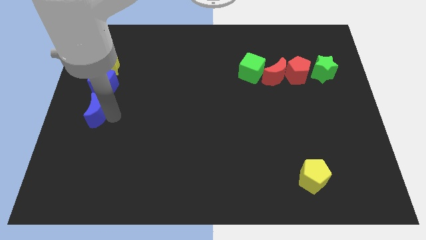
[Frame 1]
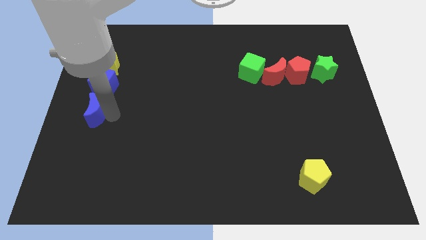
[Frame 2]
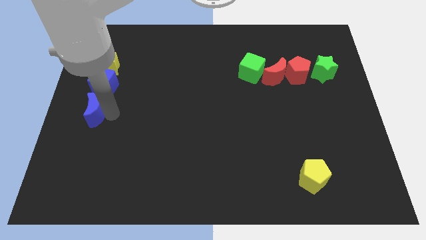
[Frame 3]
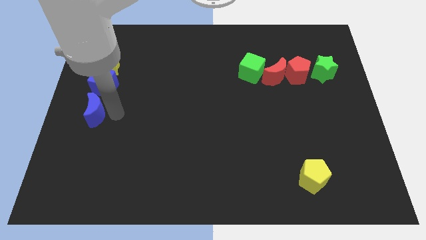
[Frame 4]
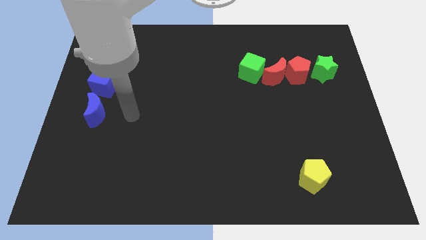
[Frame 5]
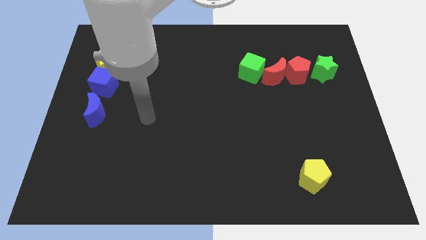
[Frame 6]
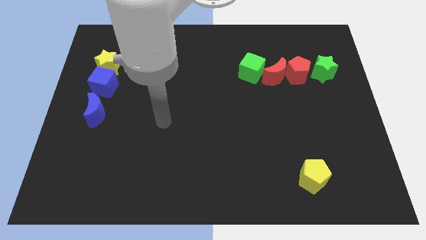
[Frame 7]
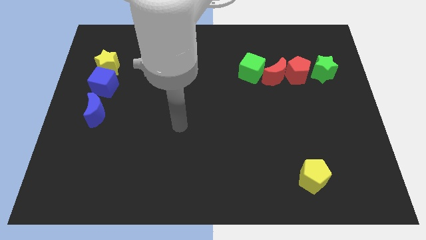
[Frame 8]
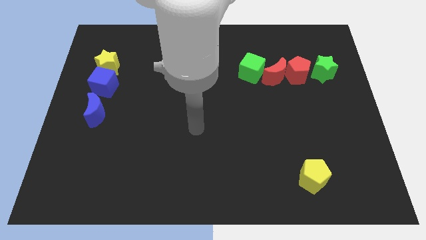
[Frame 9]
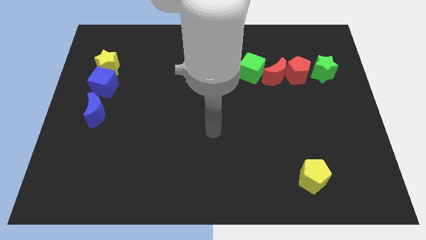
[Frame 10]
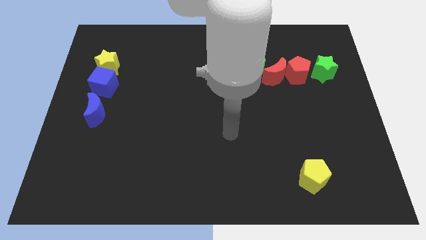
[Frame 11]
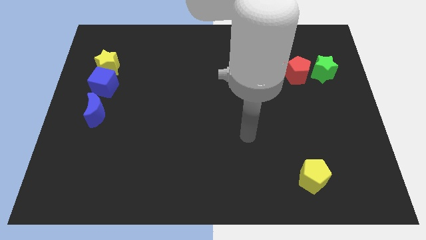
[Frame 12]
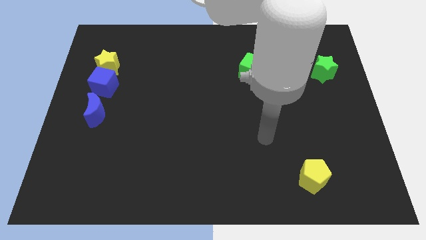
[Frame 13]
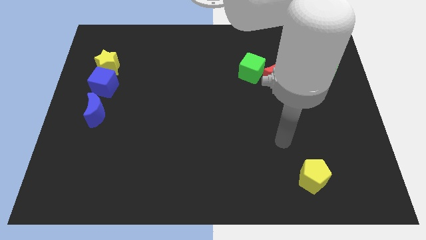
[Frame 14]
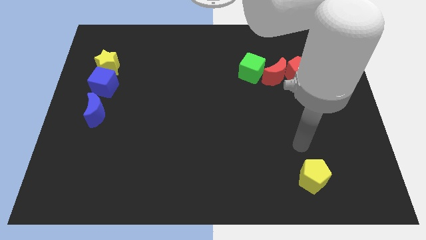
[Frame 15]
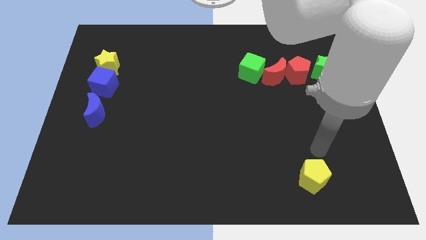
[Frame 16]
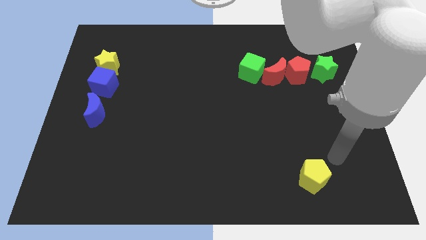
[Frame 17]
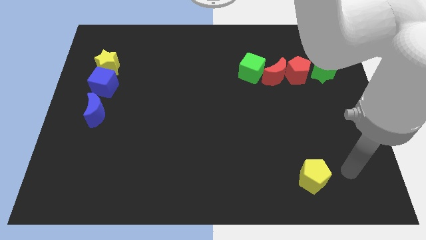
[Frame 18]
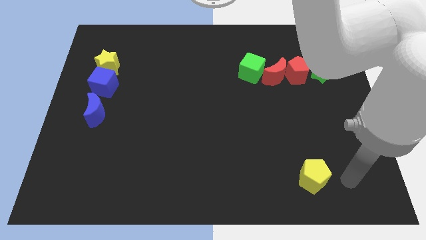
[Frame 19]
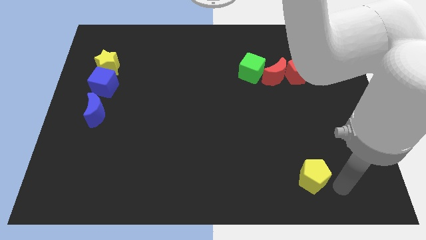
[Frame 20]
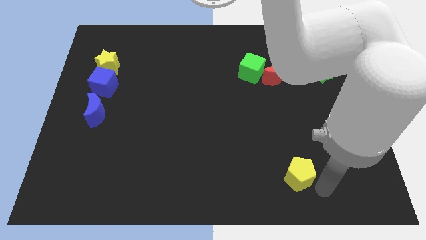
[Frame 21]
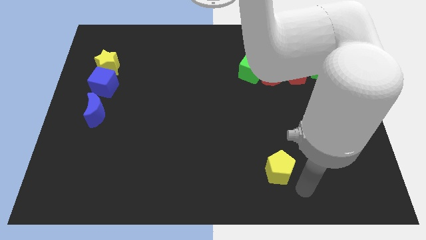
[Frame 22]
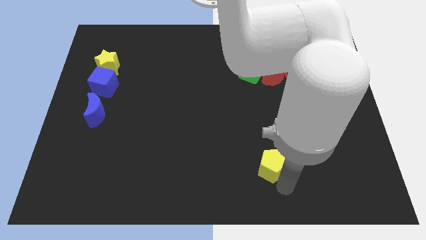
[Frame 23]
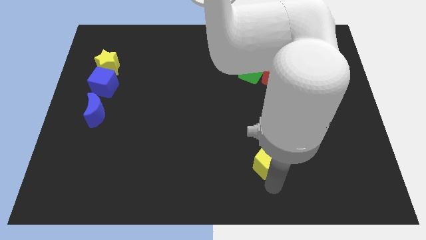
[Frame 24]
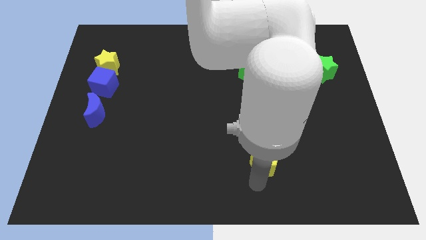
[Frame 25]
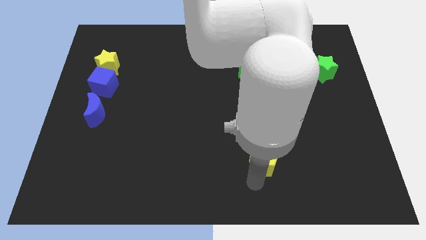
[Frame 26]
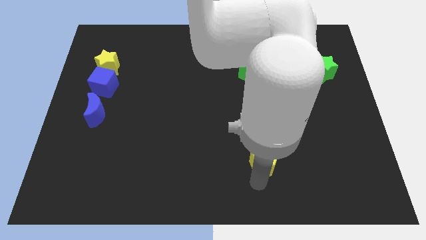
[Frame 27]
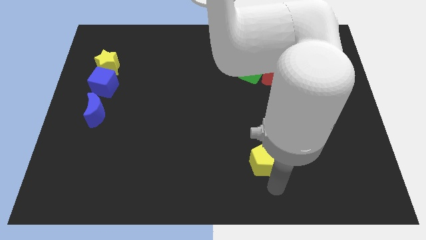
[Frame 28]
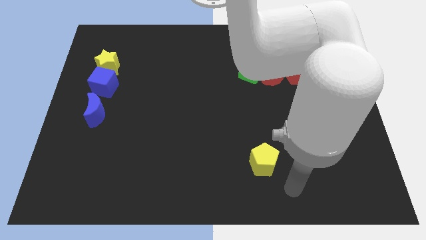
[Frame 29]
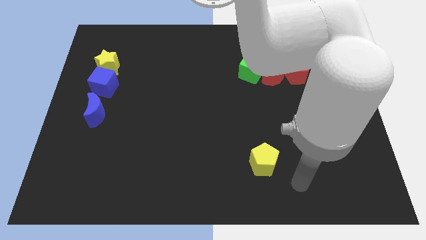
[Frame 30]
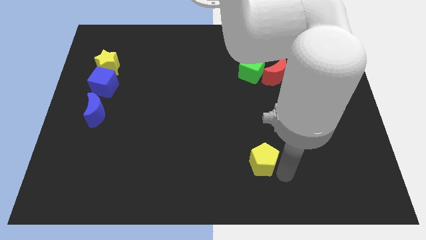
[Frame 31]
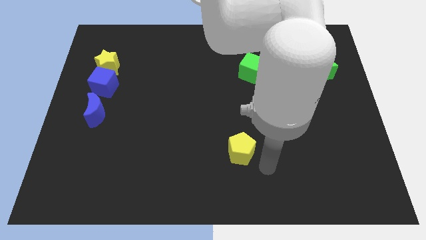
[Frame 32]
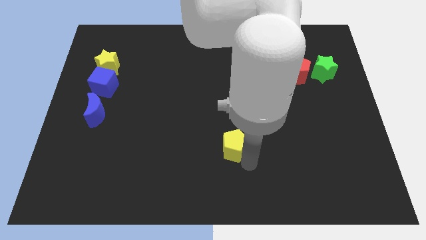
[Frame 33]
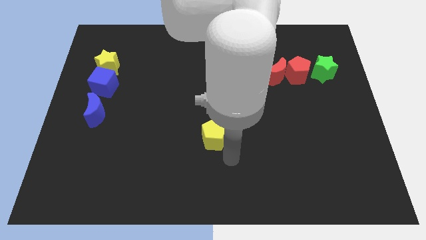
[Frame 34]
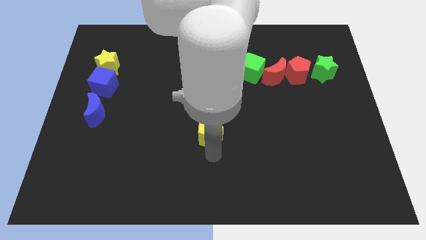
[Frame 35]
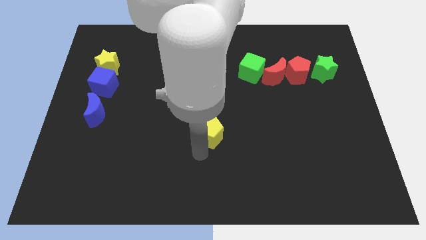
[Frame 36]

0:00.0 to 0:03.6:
drag the yellow pentagon to the center

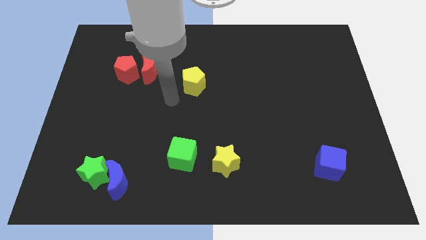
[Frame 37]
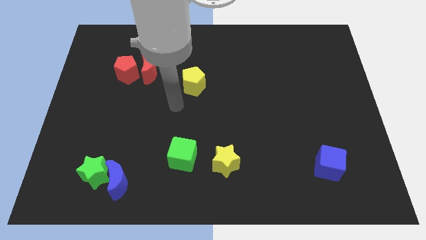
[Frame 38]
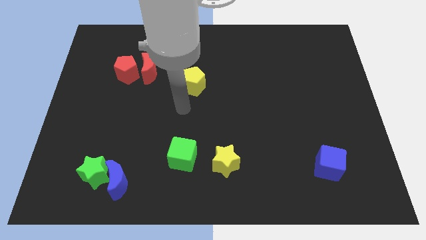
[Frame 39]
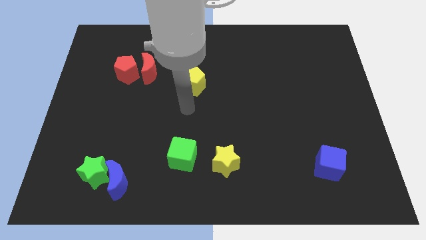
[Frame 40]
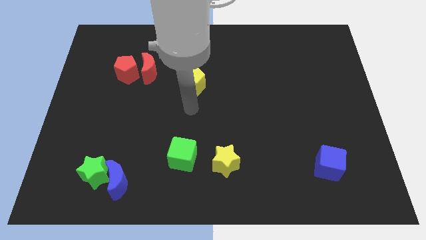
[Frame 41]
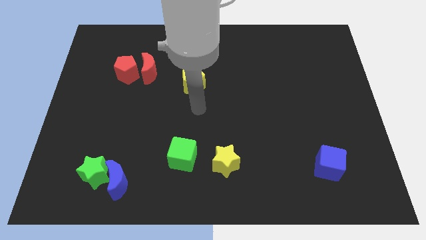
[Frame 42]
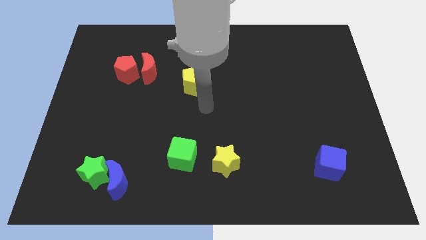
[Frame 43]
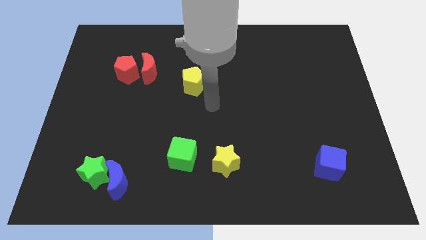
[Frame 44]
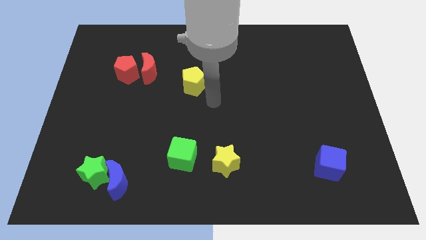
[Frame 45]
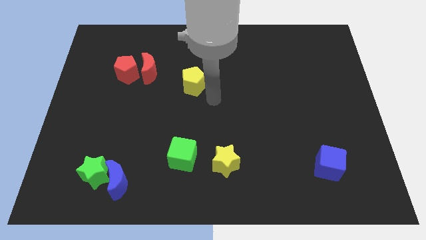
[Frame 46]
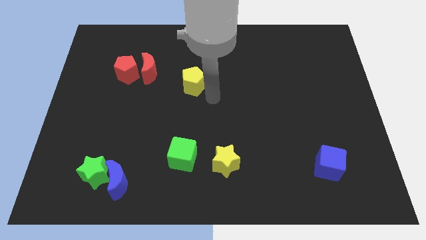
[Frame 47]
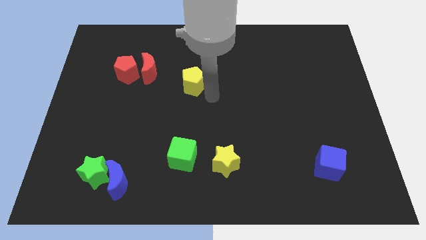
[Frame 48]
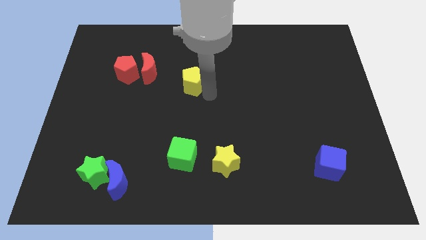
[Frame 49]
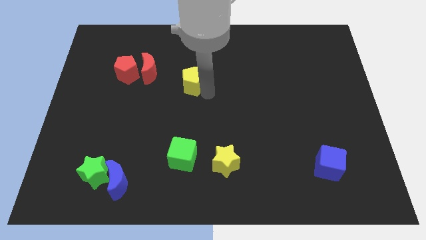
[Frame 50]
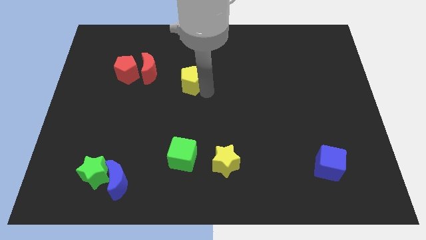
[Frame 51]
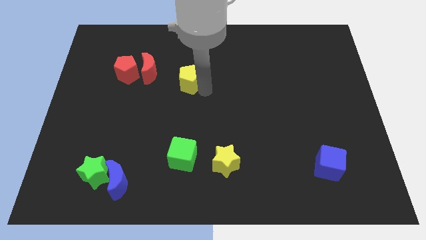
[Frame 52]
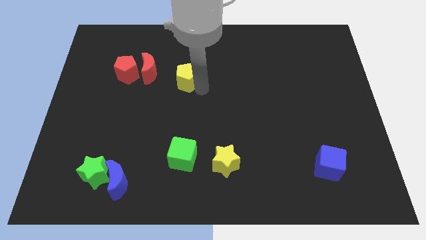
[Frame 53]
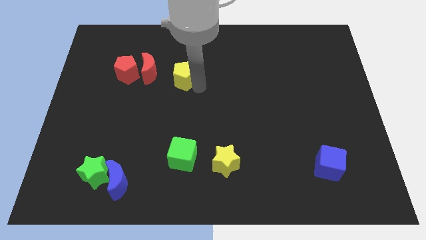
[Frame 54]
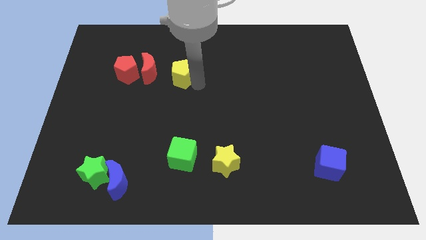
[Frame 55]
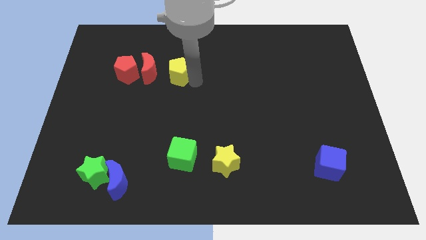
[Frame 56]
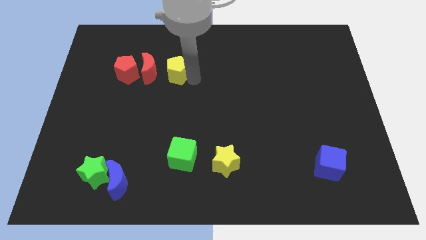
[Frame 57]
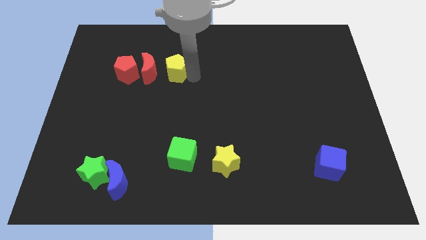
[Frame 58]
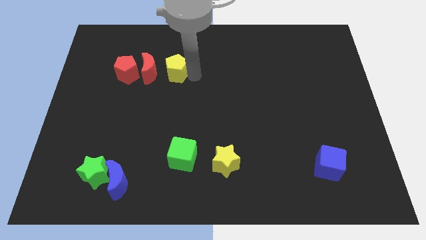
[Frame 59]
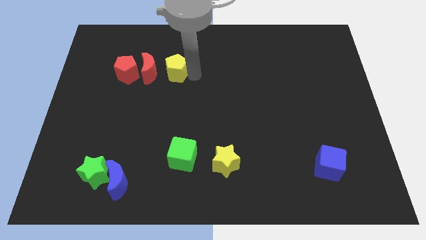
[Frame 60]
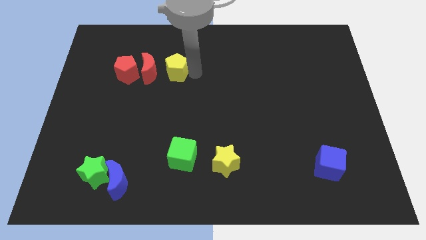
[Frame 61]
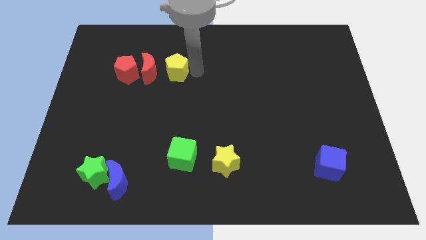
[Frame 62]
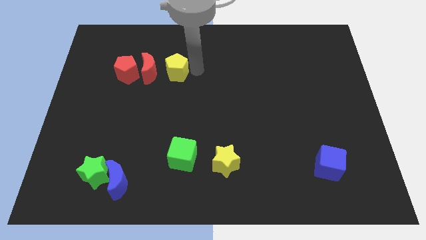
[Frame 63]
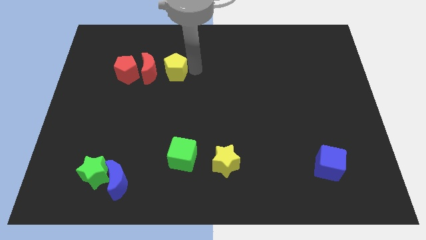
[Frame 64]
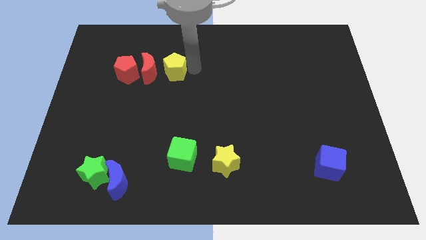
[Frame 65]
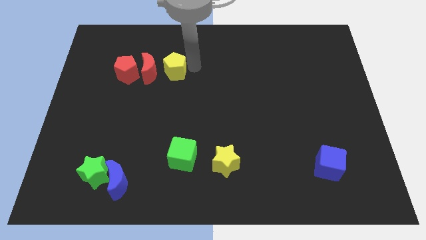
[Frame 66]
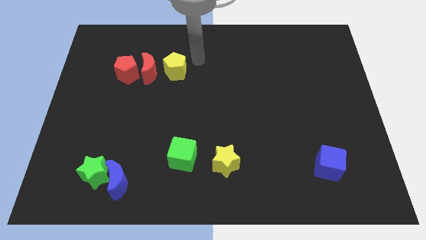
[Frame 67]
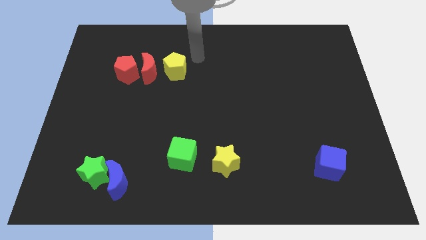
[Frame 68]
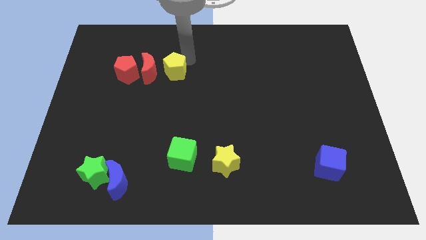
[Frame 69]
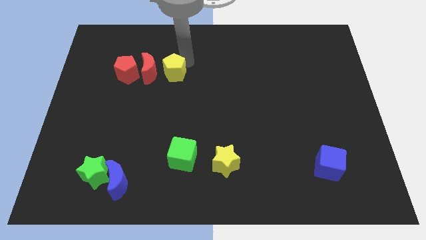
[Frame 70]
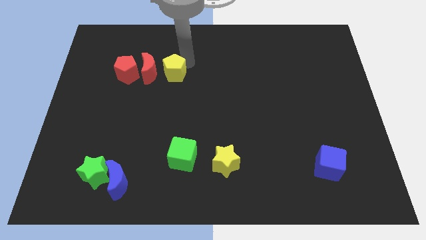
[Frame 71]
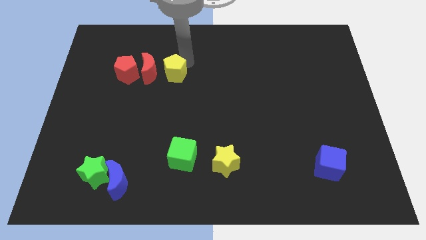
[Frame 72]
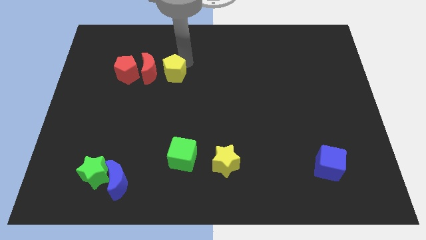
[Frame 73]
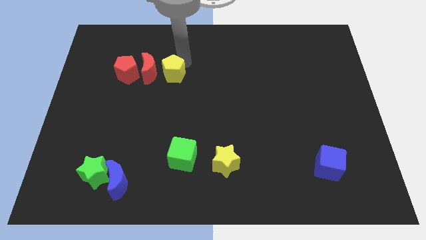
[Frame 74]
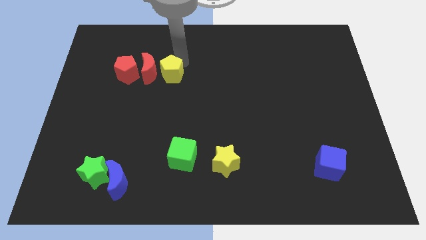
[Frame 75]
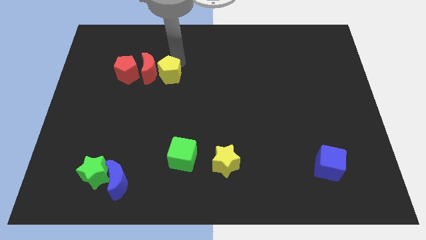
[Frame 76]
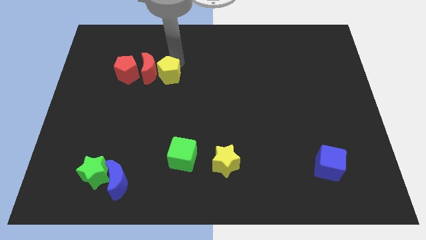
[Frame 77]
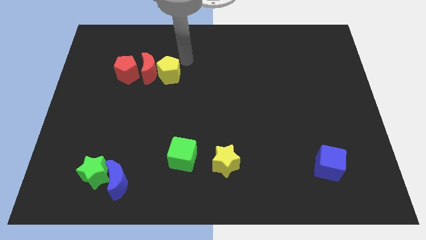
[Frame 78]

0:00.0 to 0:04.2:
move the yellow pentagon to the right side of the red moon

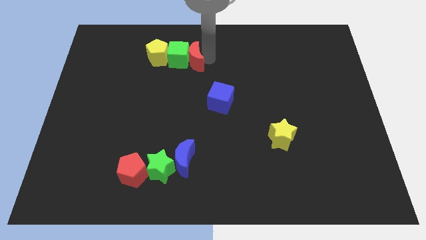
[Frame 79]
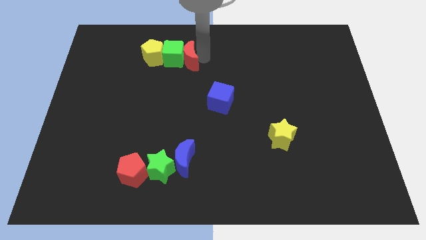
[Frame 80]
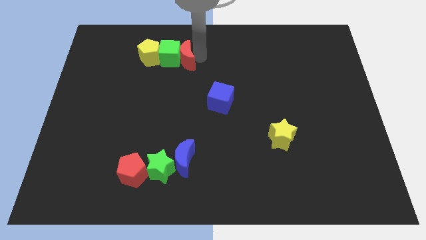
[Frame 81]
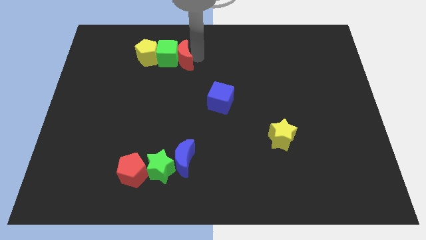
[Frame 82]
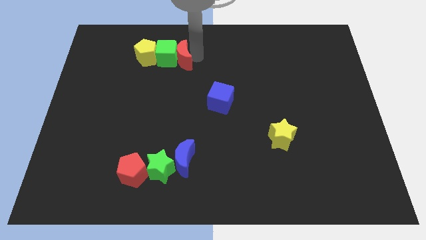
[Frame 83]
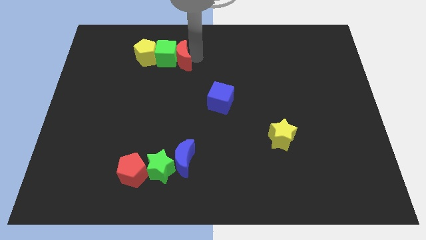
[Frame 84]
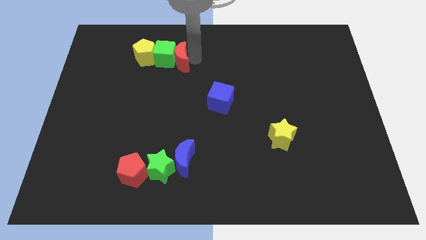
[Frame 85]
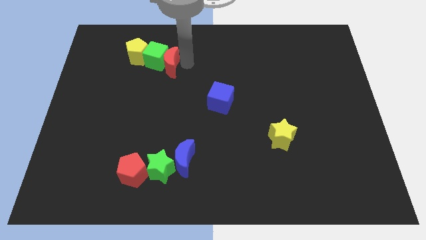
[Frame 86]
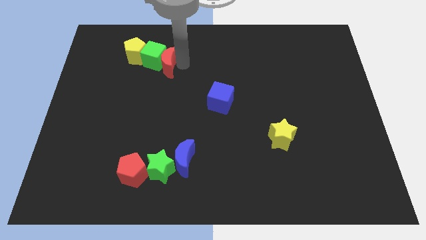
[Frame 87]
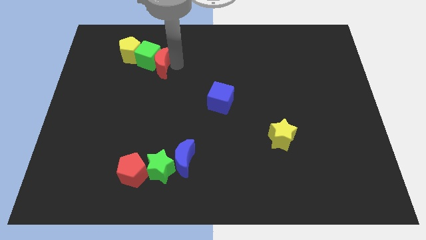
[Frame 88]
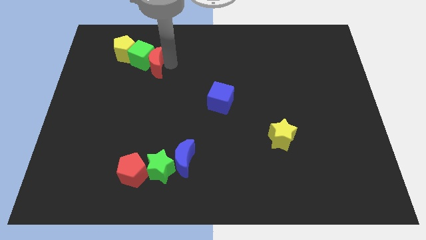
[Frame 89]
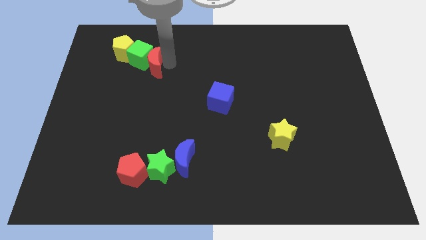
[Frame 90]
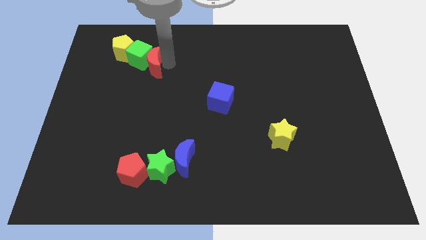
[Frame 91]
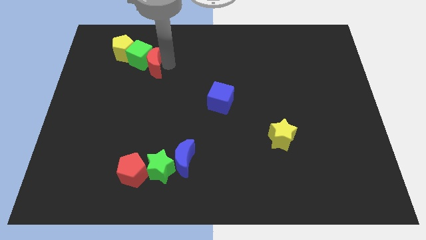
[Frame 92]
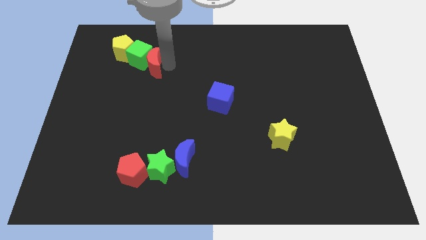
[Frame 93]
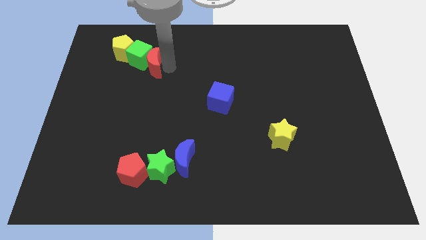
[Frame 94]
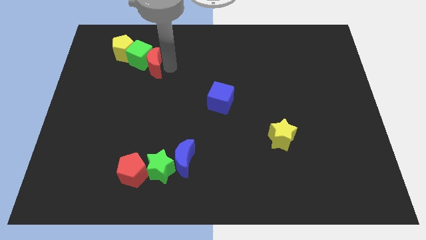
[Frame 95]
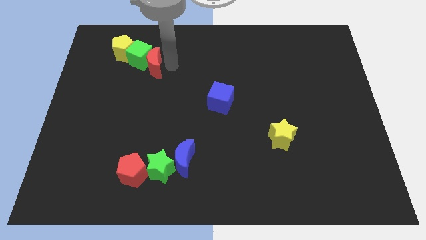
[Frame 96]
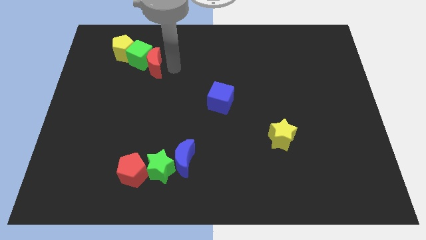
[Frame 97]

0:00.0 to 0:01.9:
slide red moon along with other blocks towards top left corner
